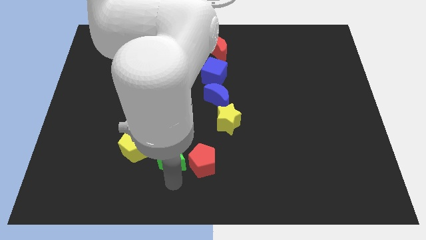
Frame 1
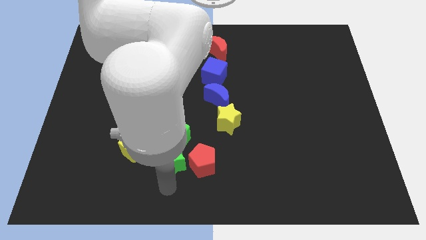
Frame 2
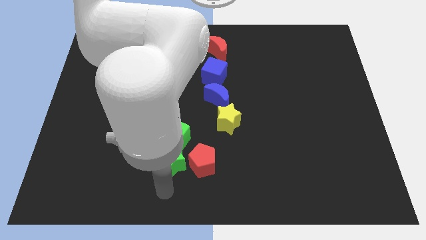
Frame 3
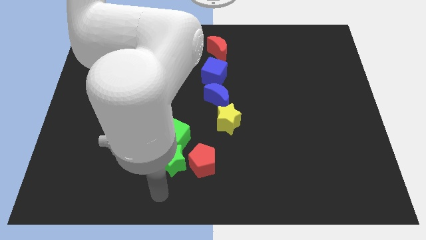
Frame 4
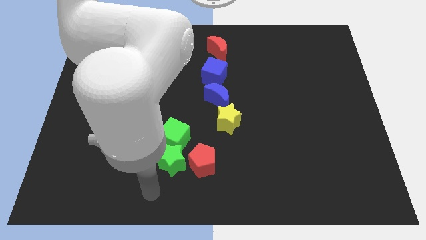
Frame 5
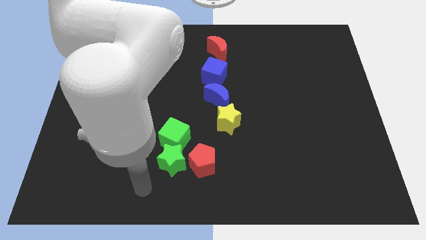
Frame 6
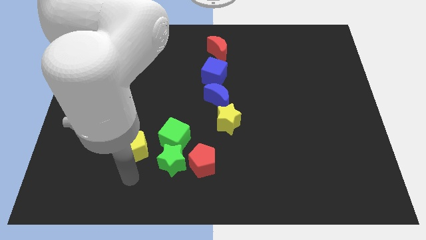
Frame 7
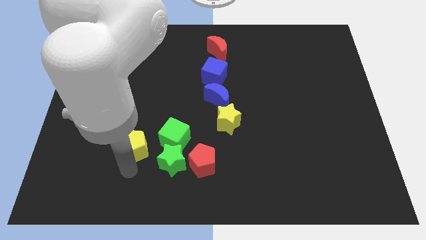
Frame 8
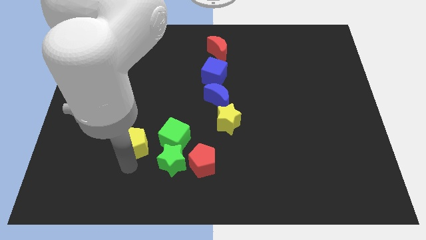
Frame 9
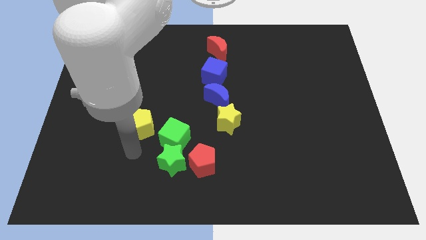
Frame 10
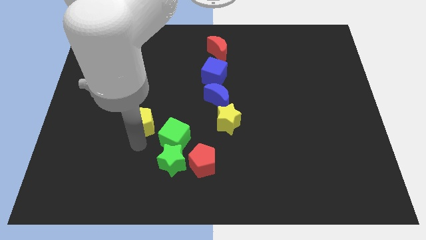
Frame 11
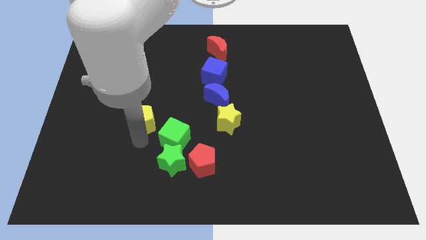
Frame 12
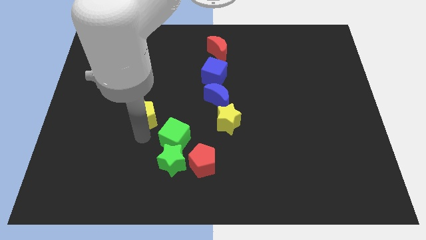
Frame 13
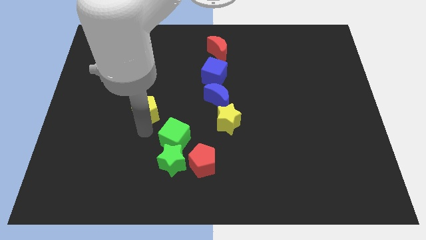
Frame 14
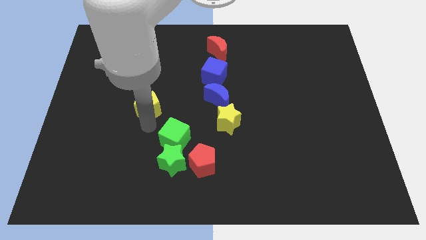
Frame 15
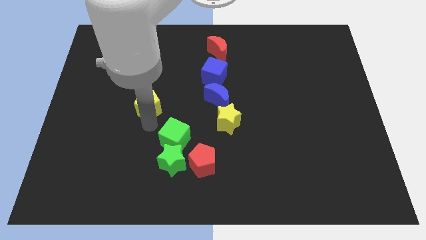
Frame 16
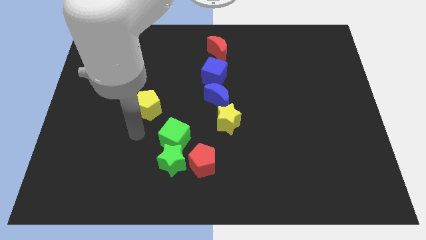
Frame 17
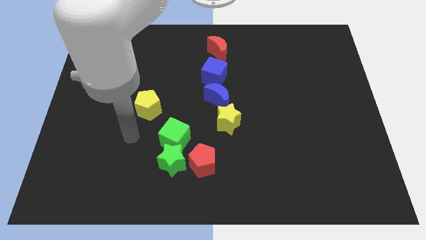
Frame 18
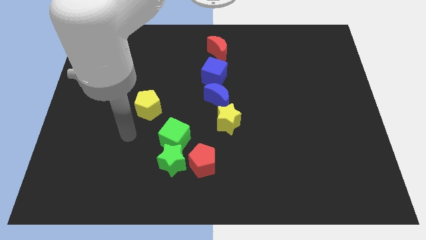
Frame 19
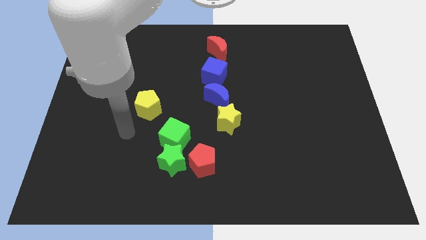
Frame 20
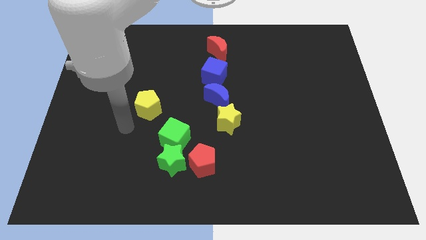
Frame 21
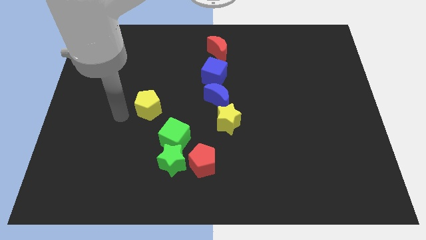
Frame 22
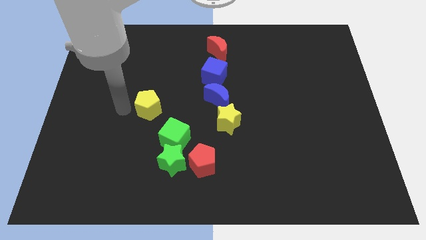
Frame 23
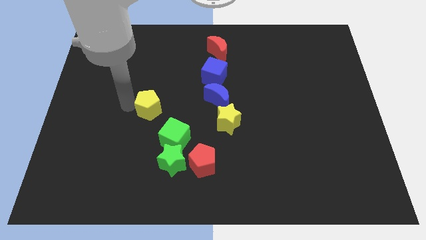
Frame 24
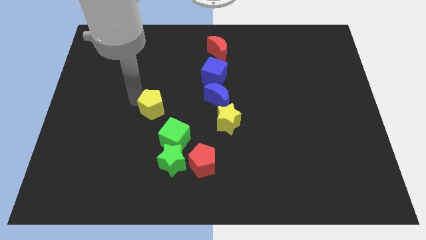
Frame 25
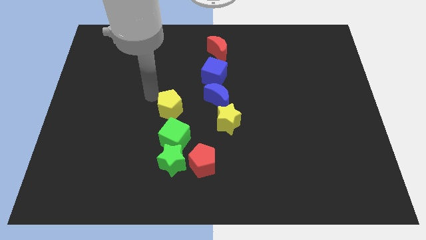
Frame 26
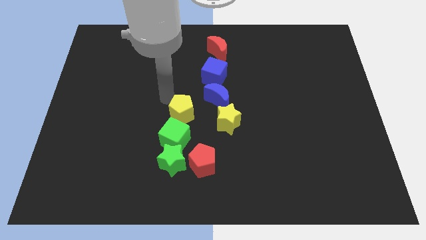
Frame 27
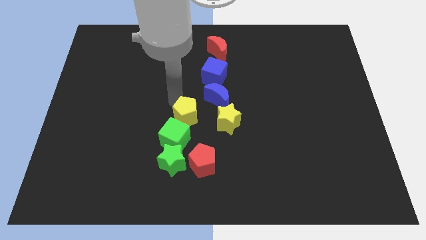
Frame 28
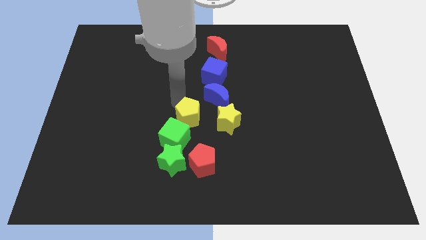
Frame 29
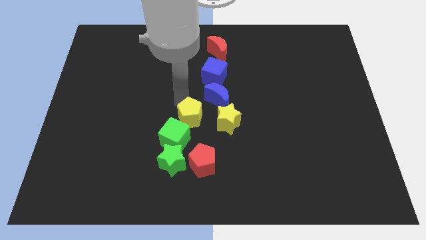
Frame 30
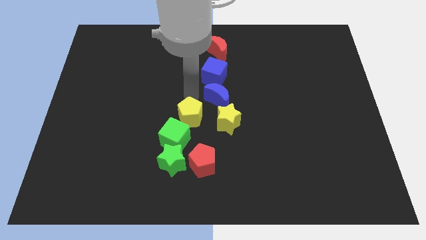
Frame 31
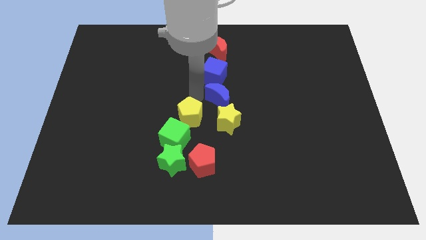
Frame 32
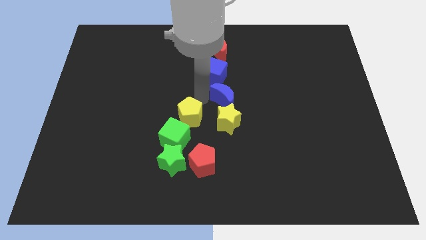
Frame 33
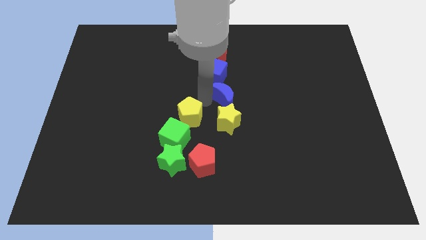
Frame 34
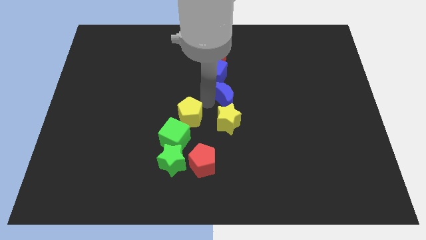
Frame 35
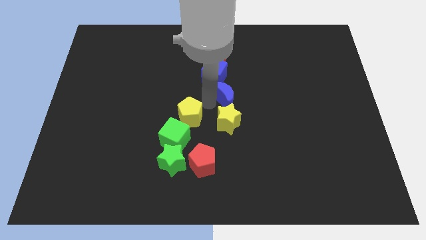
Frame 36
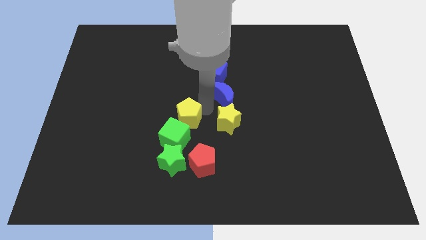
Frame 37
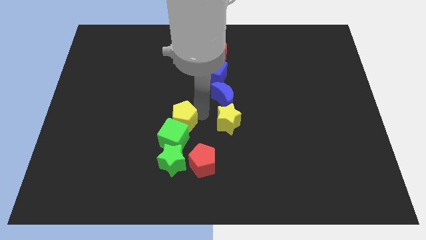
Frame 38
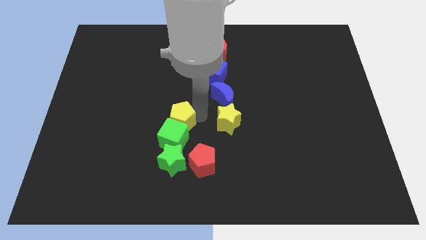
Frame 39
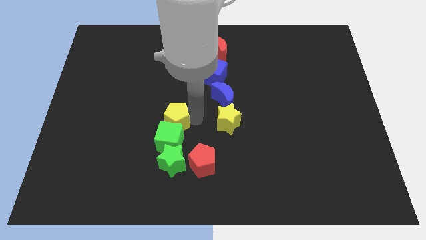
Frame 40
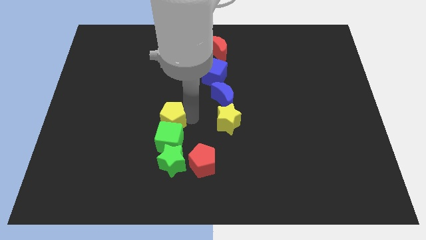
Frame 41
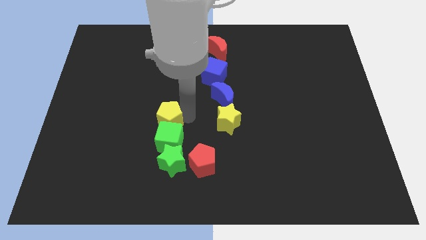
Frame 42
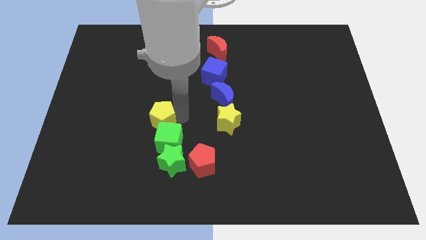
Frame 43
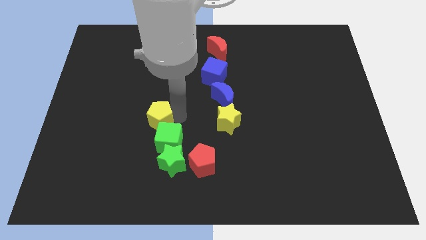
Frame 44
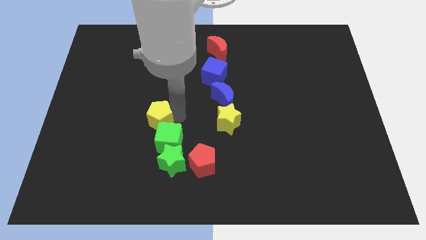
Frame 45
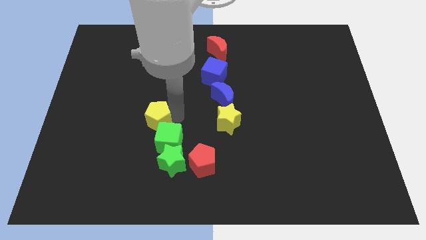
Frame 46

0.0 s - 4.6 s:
push the yellow pentagon to the bottom left of the blue cube

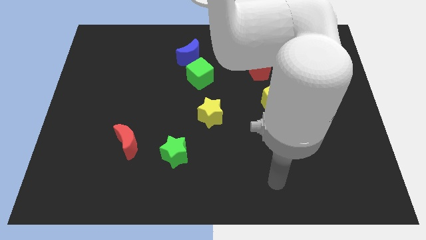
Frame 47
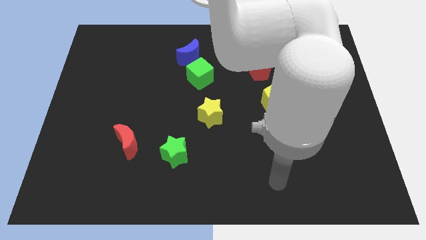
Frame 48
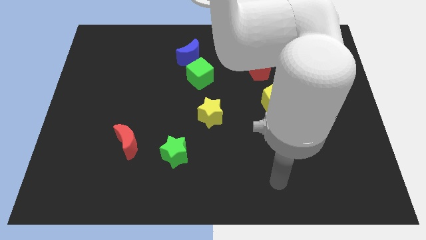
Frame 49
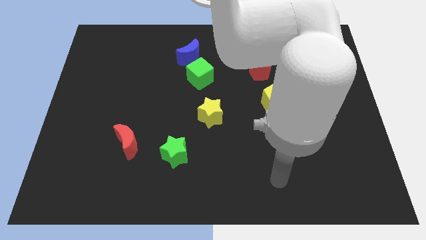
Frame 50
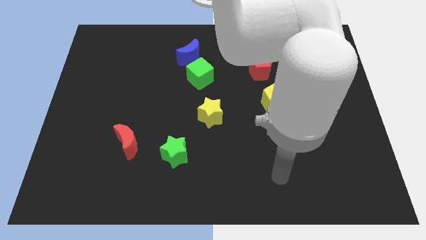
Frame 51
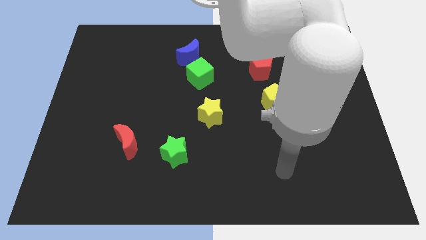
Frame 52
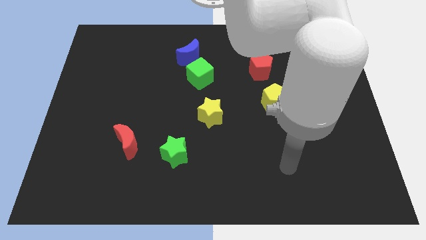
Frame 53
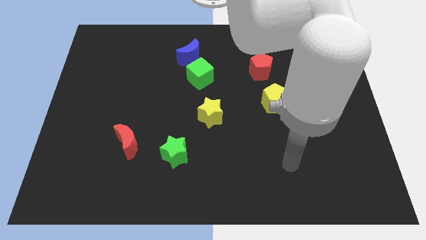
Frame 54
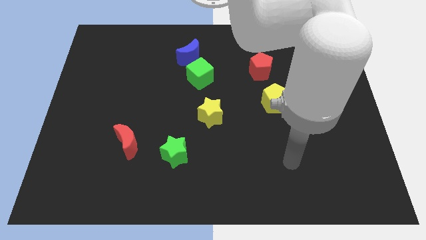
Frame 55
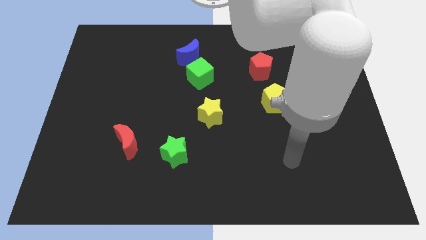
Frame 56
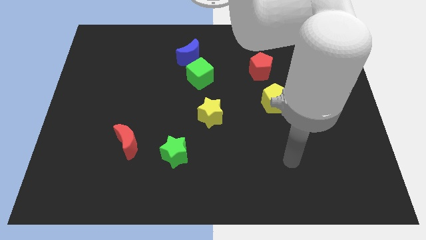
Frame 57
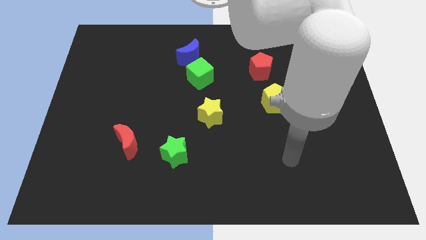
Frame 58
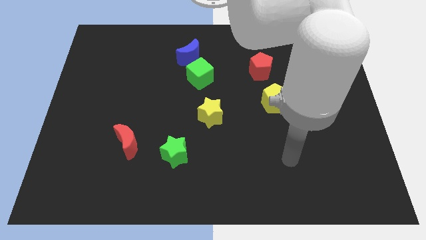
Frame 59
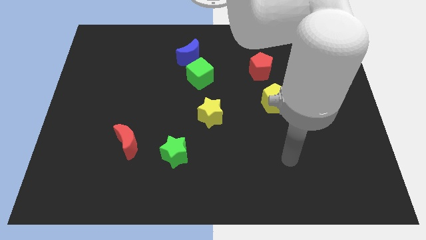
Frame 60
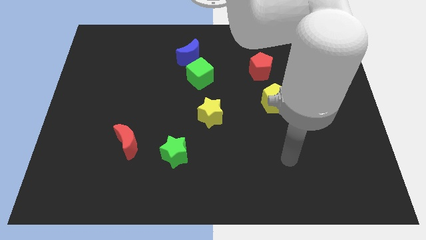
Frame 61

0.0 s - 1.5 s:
move your hand slightly up

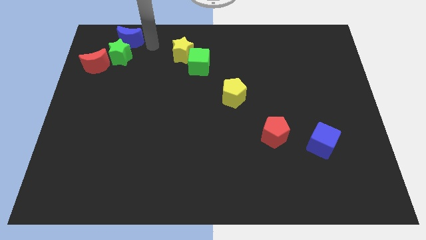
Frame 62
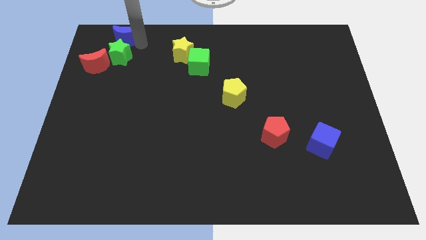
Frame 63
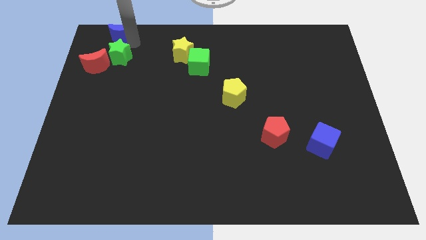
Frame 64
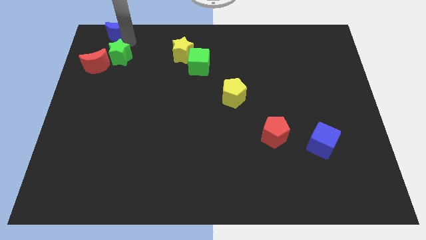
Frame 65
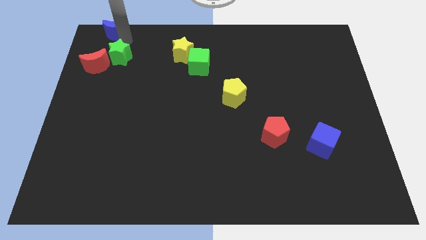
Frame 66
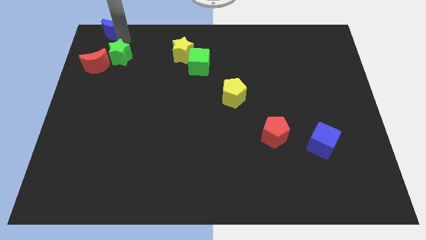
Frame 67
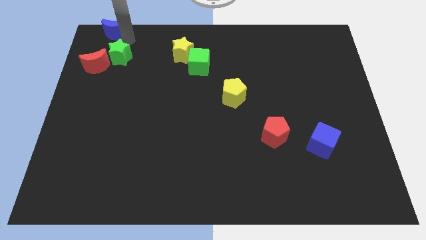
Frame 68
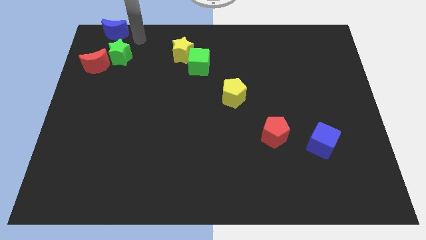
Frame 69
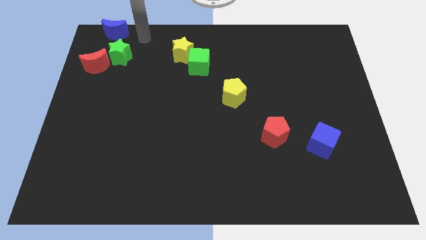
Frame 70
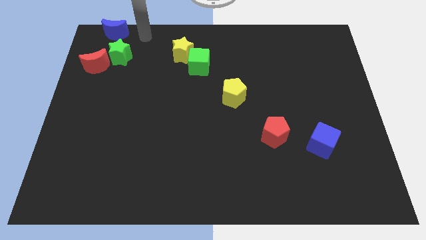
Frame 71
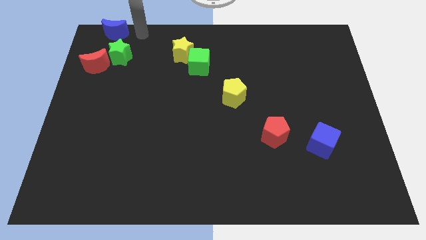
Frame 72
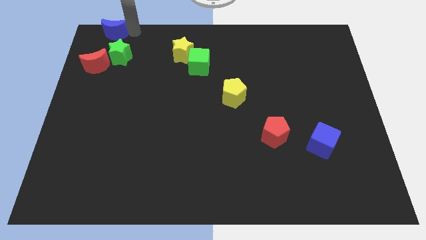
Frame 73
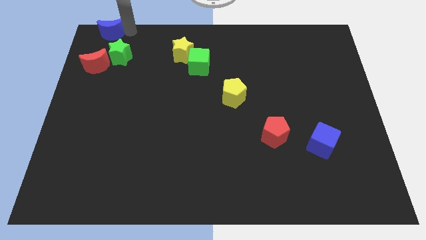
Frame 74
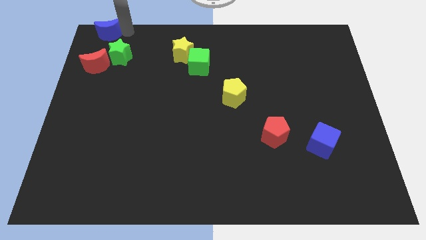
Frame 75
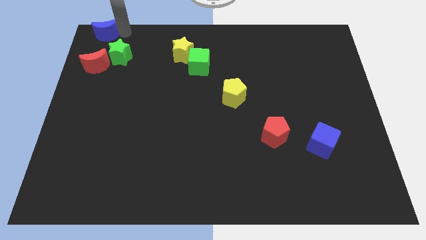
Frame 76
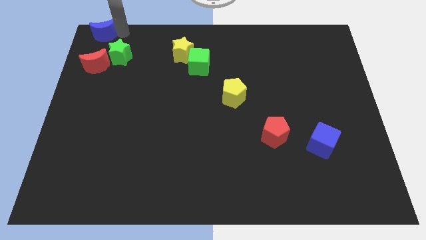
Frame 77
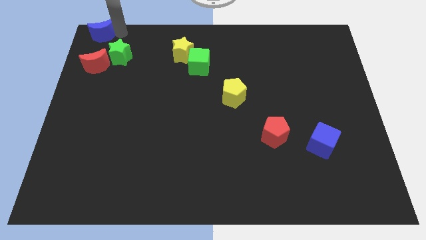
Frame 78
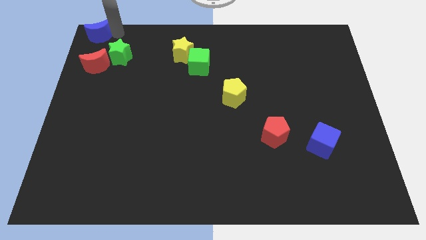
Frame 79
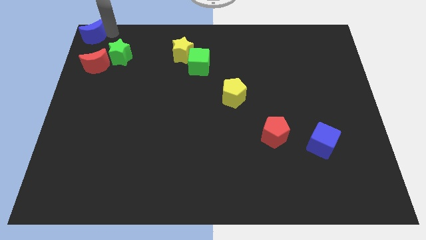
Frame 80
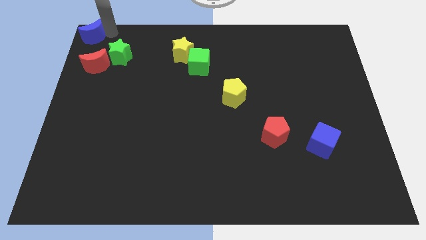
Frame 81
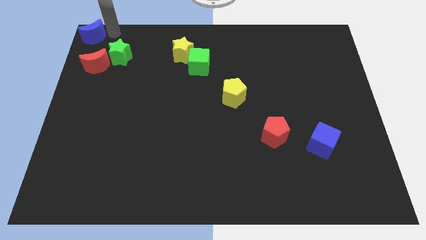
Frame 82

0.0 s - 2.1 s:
place the blue crescent on the top left of the board

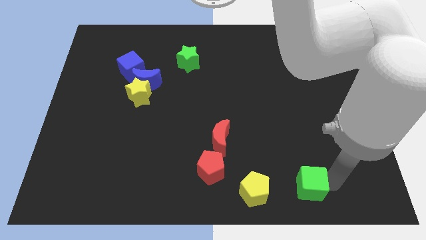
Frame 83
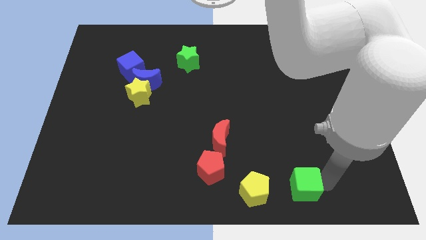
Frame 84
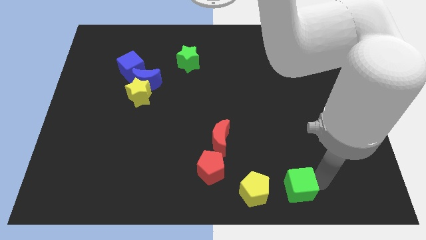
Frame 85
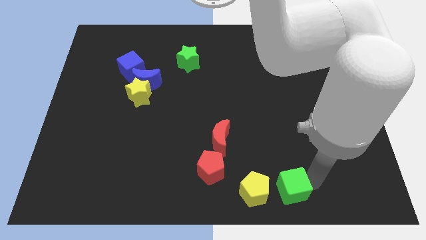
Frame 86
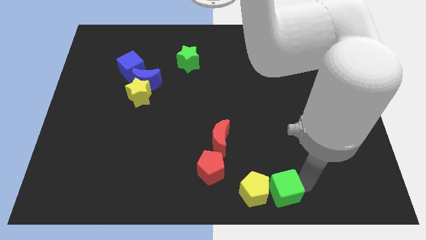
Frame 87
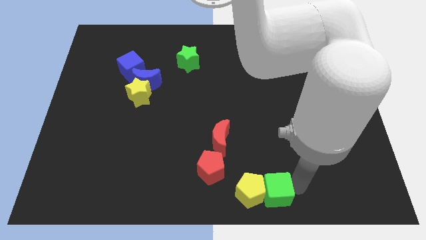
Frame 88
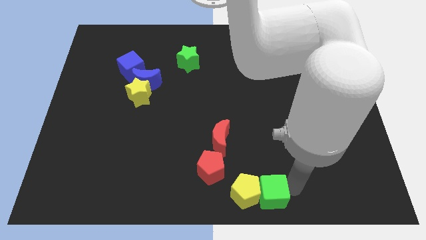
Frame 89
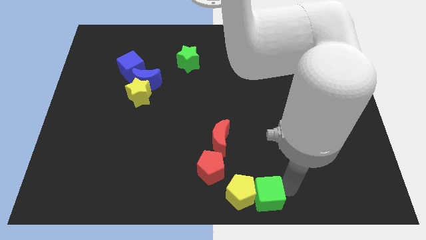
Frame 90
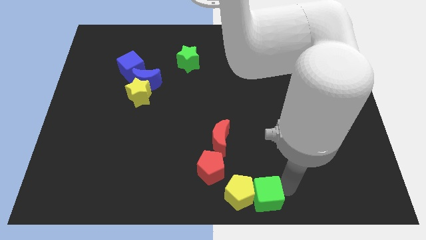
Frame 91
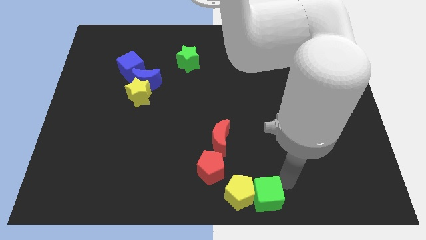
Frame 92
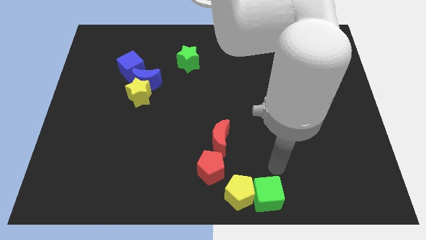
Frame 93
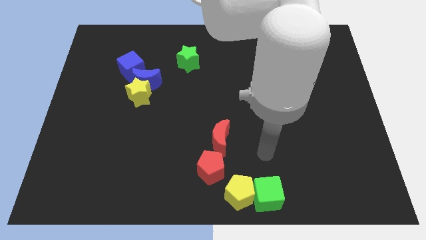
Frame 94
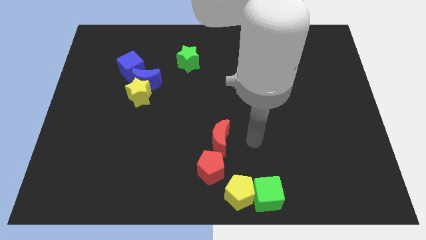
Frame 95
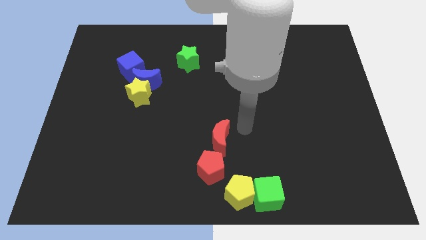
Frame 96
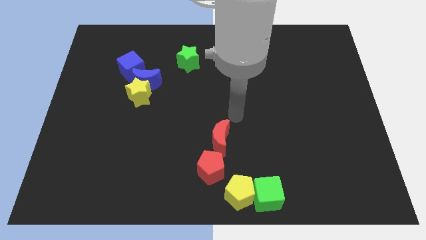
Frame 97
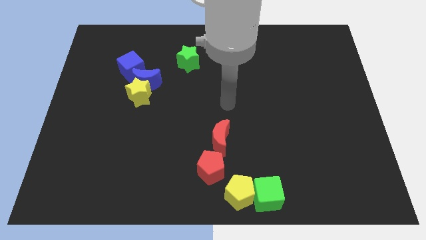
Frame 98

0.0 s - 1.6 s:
put the green cube into the yellow pentagon
